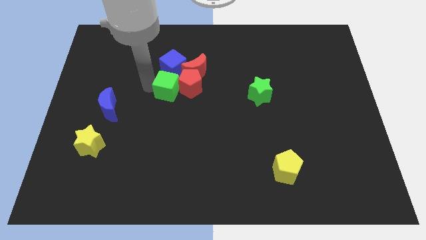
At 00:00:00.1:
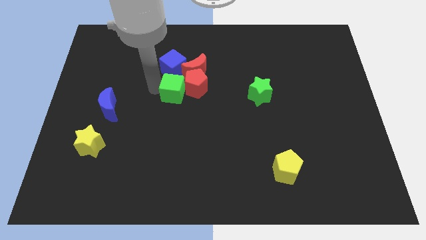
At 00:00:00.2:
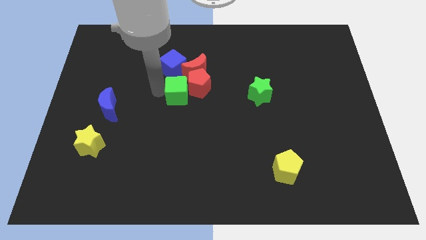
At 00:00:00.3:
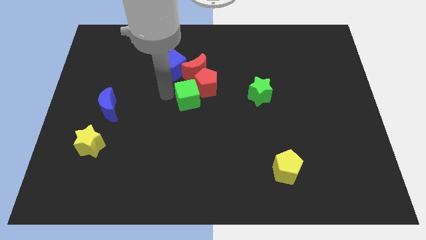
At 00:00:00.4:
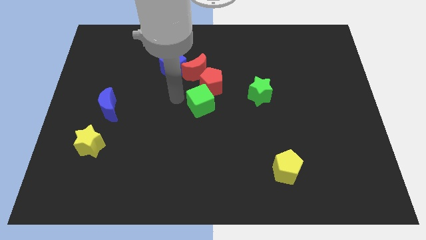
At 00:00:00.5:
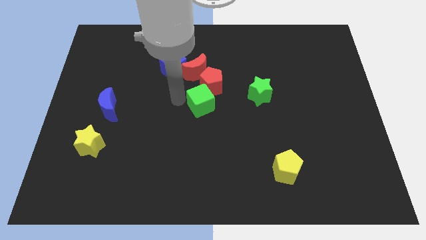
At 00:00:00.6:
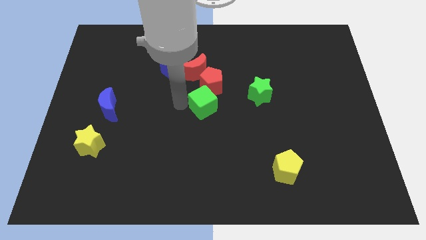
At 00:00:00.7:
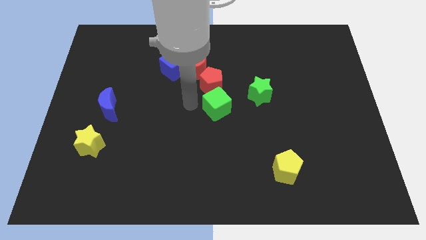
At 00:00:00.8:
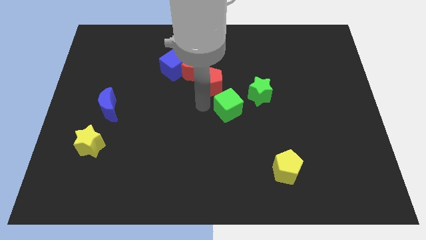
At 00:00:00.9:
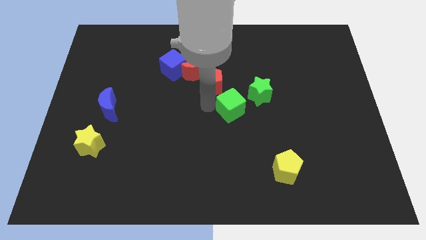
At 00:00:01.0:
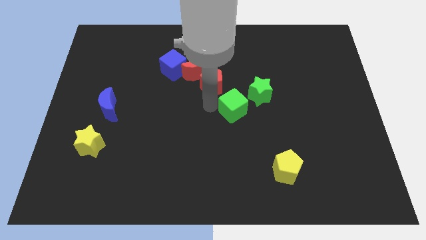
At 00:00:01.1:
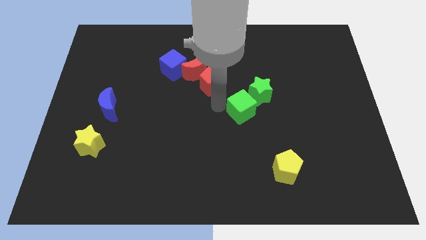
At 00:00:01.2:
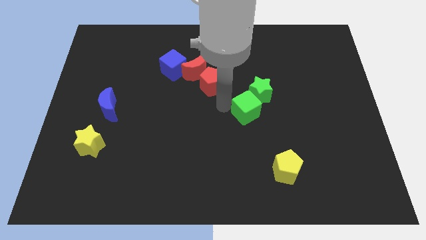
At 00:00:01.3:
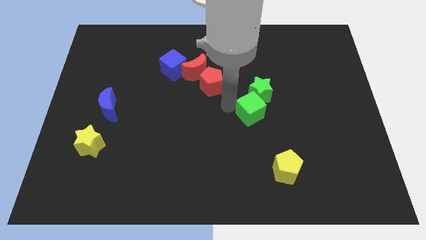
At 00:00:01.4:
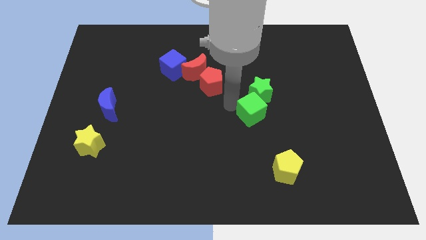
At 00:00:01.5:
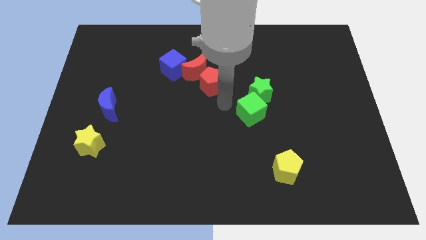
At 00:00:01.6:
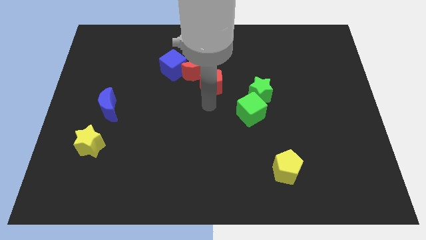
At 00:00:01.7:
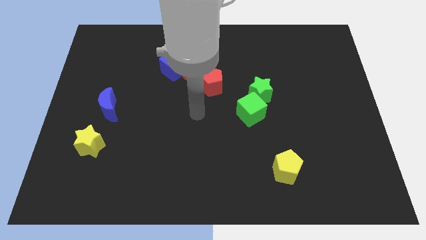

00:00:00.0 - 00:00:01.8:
move the green cube to the bottom of the green star

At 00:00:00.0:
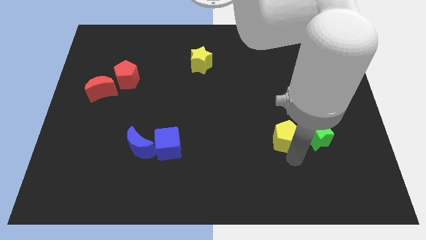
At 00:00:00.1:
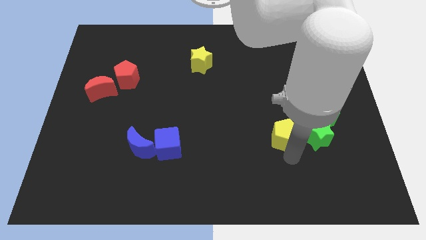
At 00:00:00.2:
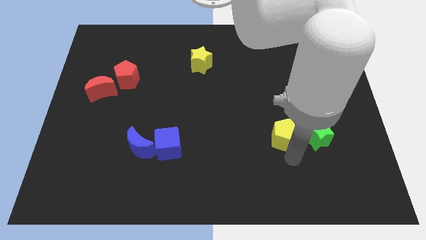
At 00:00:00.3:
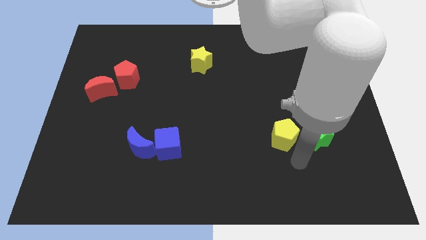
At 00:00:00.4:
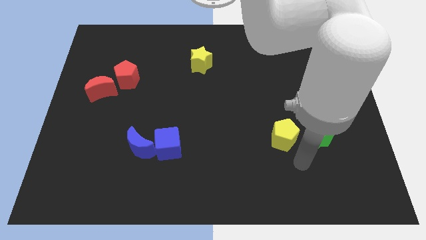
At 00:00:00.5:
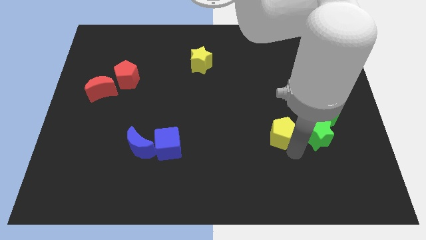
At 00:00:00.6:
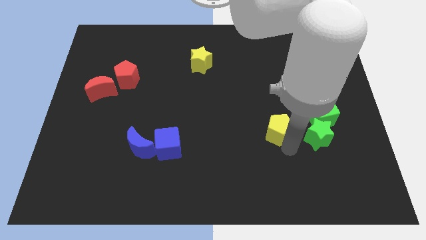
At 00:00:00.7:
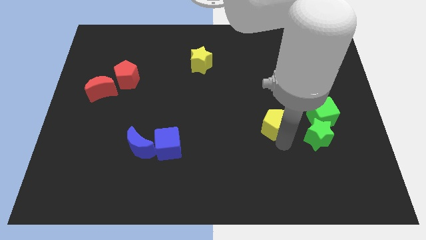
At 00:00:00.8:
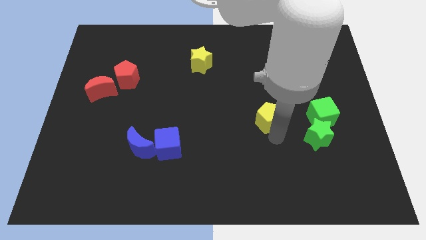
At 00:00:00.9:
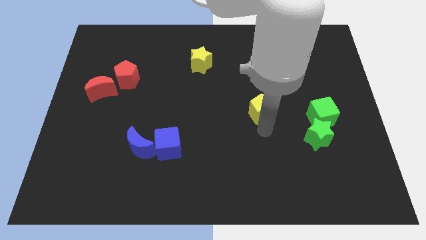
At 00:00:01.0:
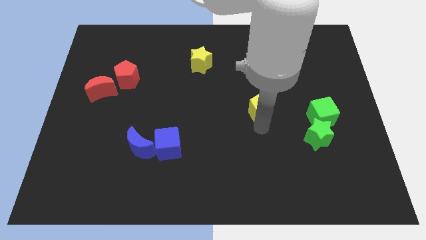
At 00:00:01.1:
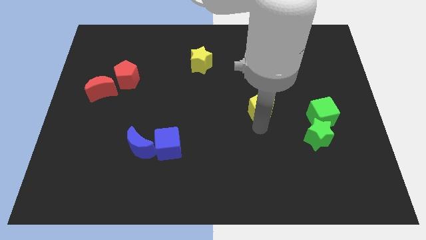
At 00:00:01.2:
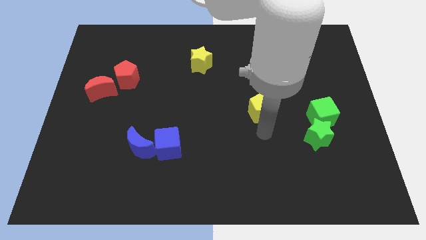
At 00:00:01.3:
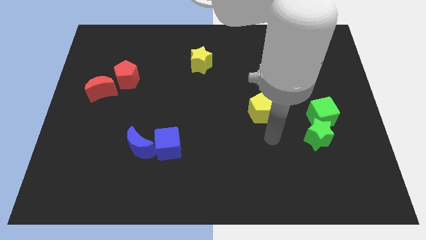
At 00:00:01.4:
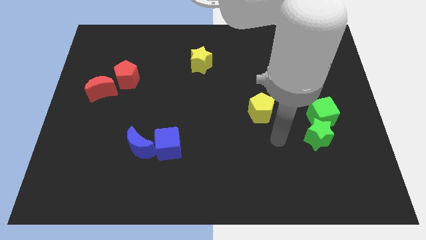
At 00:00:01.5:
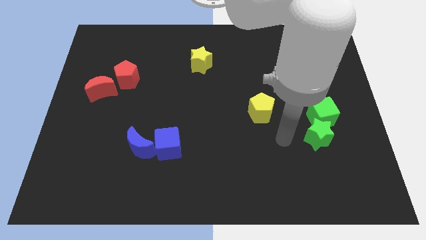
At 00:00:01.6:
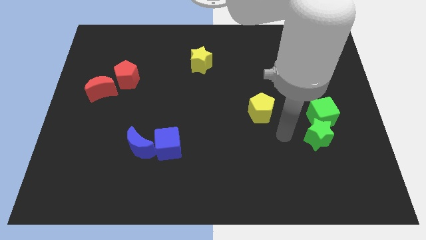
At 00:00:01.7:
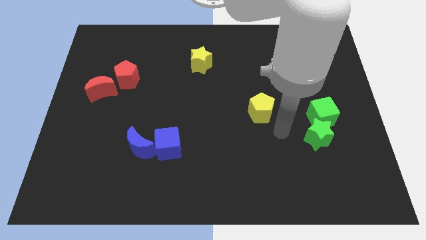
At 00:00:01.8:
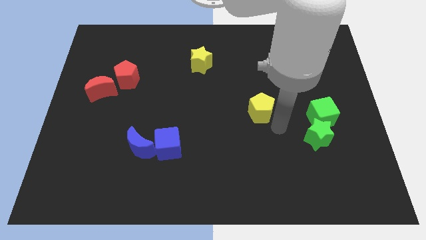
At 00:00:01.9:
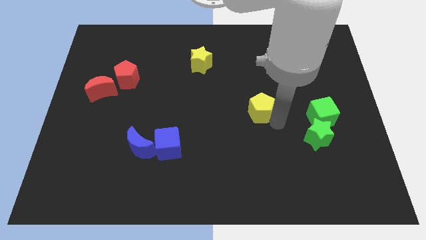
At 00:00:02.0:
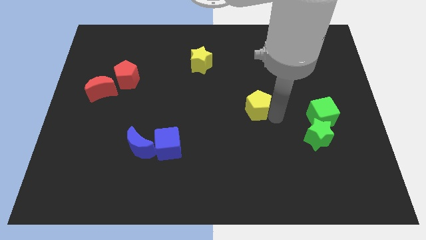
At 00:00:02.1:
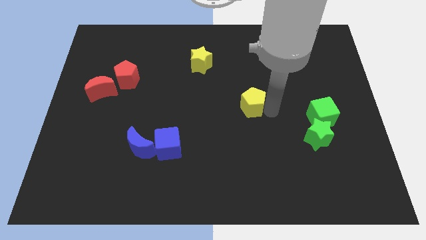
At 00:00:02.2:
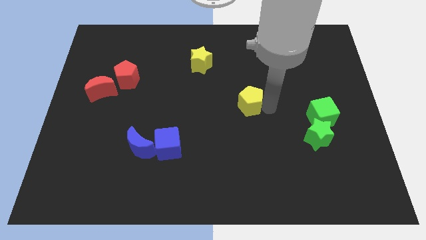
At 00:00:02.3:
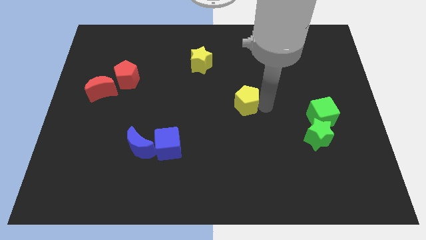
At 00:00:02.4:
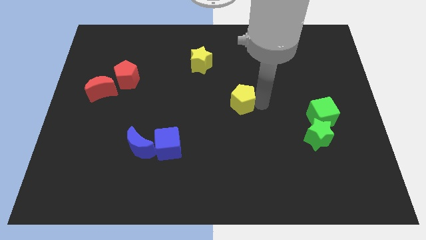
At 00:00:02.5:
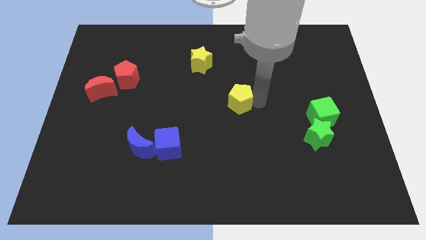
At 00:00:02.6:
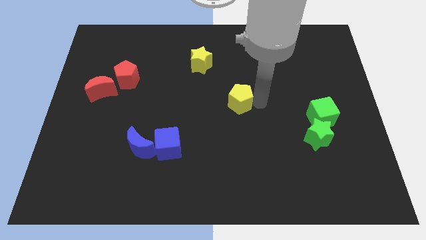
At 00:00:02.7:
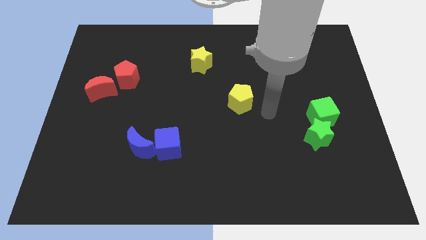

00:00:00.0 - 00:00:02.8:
move the yellow pentagon towards the center of the board

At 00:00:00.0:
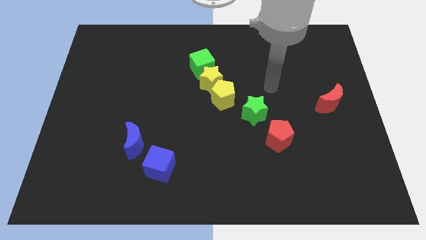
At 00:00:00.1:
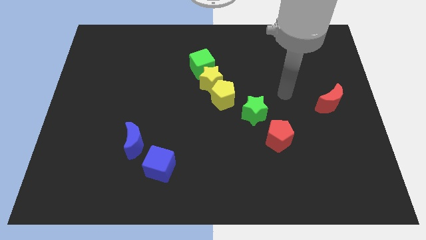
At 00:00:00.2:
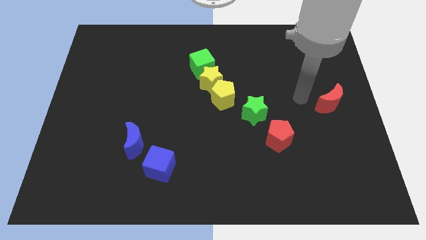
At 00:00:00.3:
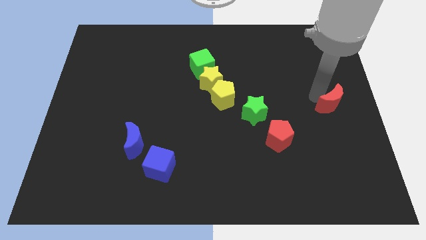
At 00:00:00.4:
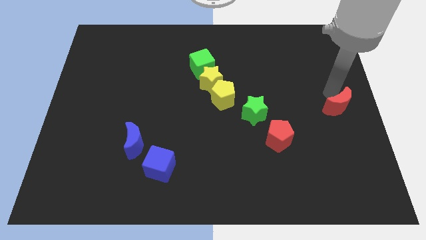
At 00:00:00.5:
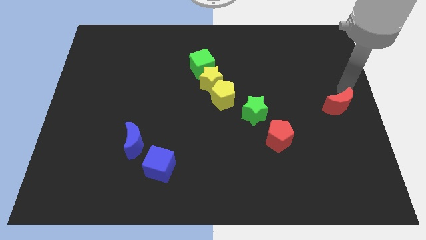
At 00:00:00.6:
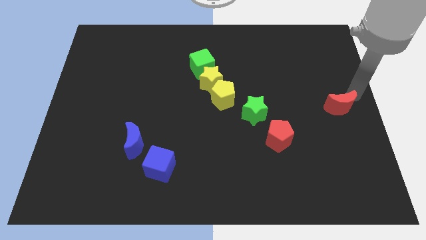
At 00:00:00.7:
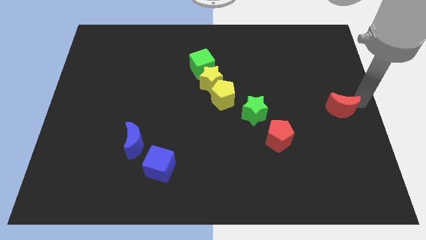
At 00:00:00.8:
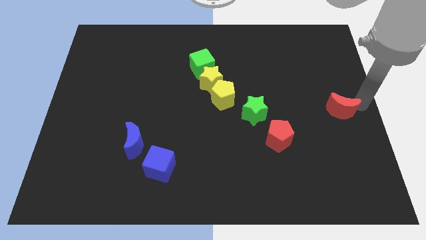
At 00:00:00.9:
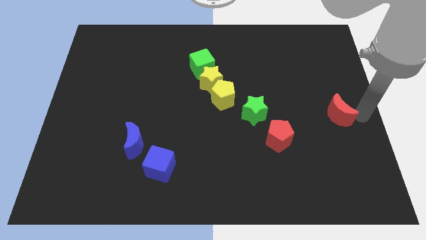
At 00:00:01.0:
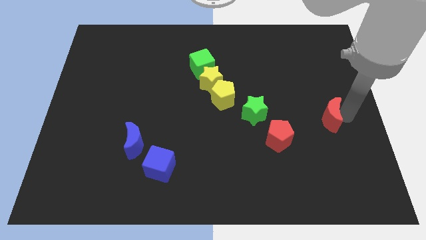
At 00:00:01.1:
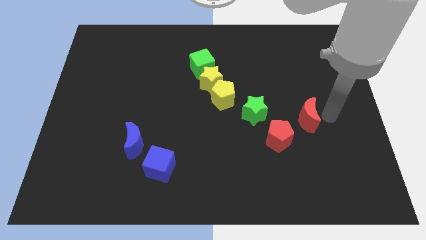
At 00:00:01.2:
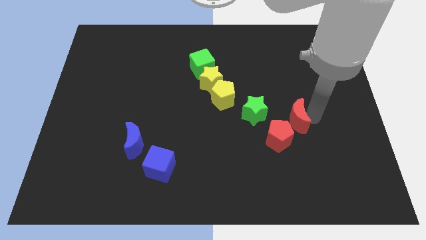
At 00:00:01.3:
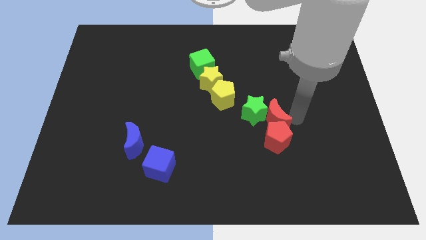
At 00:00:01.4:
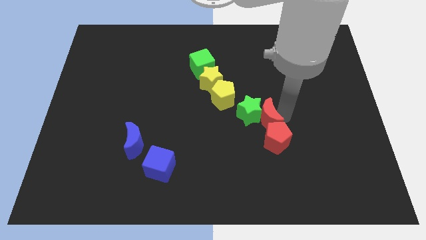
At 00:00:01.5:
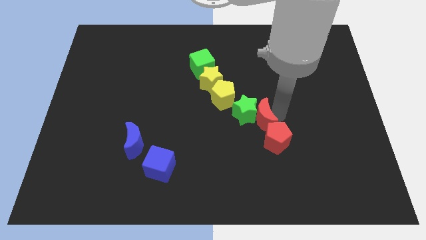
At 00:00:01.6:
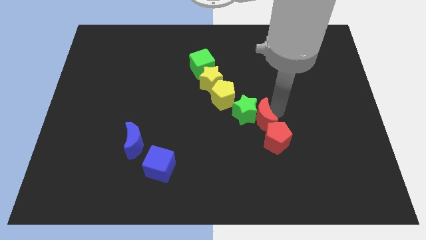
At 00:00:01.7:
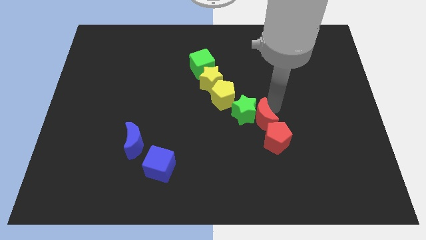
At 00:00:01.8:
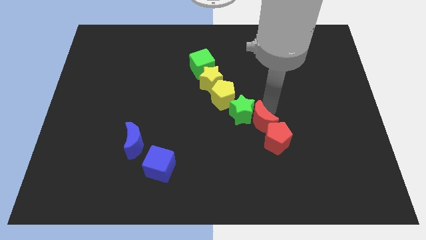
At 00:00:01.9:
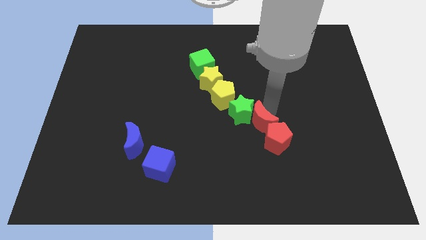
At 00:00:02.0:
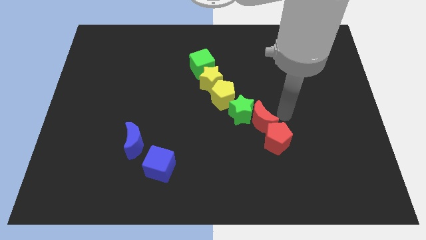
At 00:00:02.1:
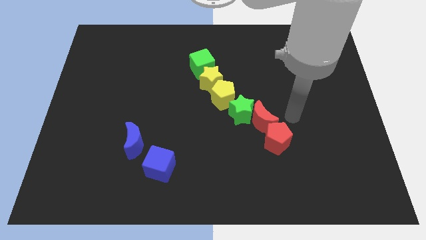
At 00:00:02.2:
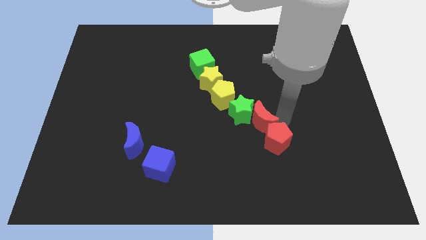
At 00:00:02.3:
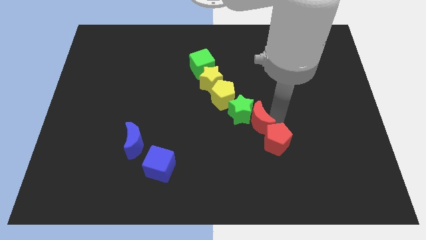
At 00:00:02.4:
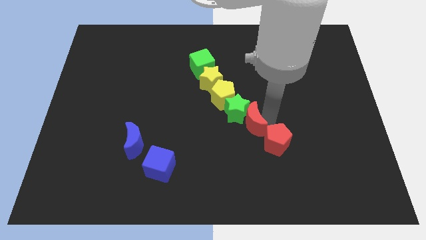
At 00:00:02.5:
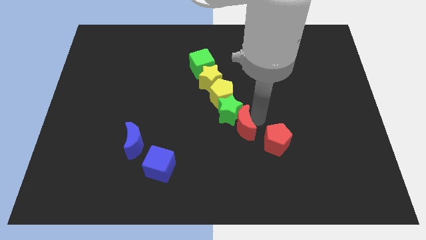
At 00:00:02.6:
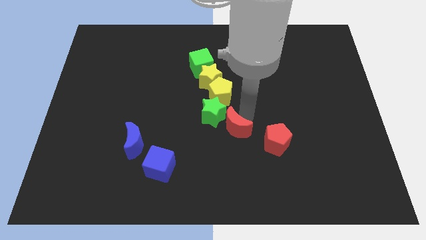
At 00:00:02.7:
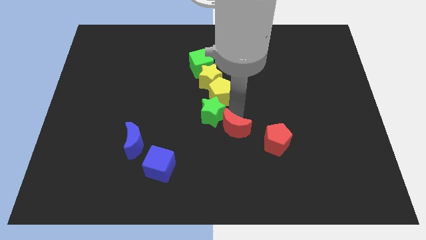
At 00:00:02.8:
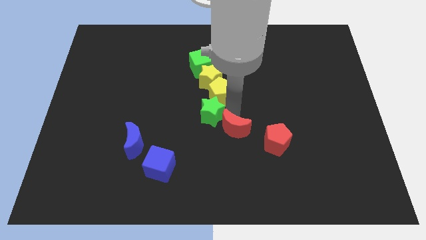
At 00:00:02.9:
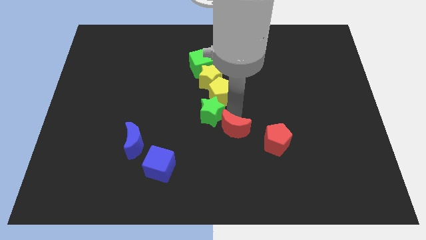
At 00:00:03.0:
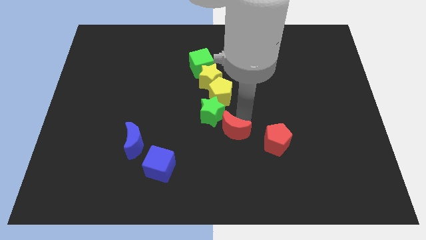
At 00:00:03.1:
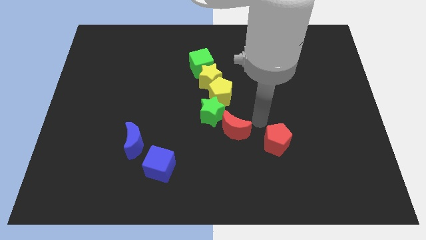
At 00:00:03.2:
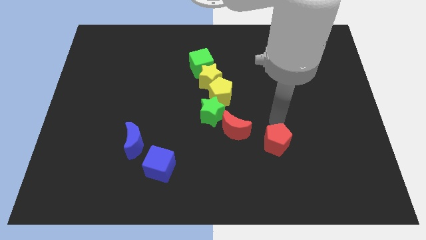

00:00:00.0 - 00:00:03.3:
place red crescent diagonally in between the green star and the red pentagon

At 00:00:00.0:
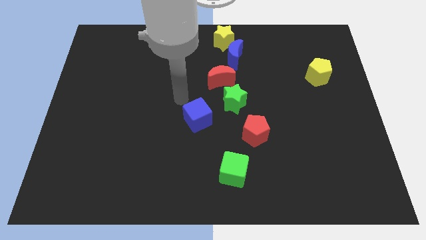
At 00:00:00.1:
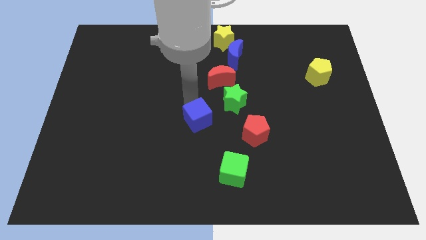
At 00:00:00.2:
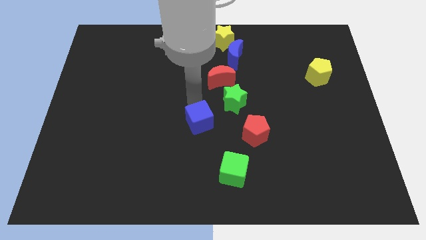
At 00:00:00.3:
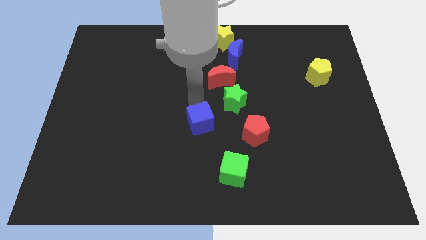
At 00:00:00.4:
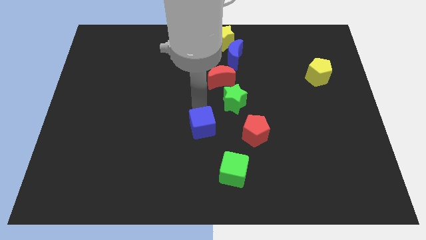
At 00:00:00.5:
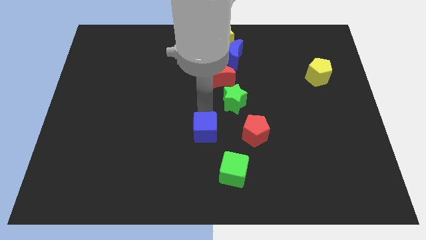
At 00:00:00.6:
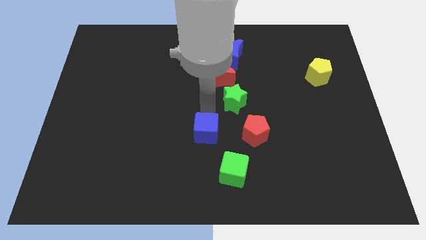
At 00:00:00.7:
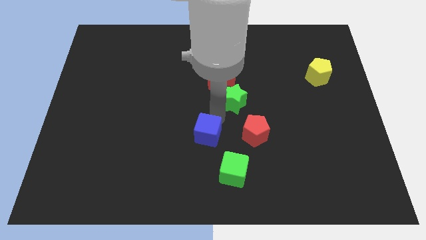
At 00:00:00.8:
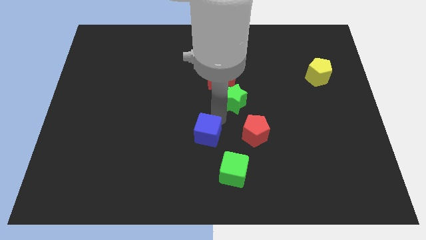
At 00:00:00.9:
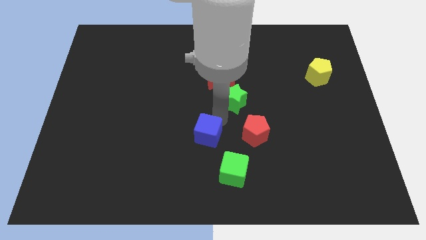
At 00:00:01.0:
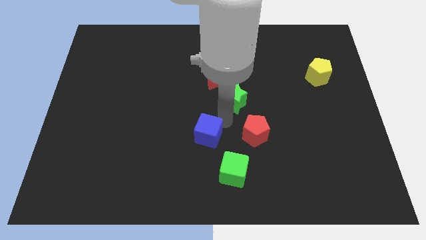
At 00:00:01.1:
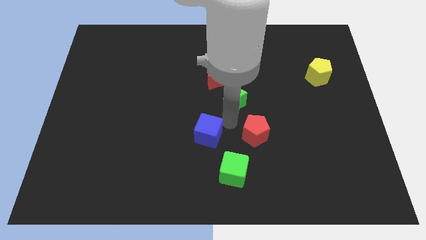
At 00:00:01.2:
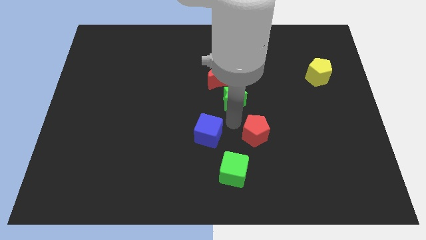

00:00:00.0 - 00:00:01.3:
push blue cube to the left of red pentagon
